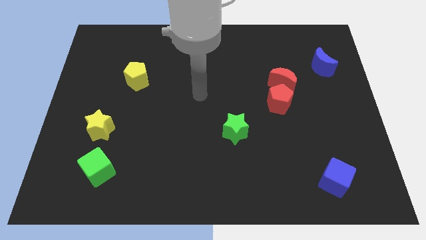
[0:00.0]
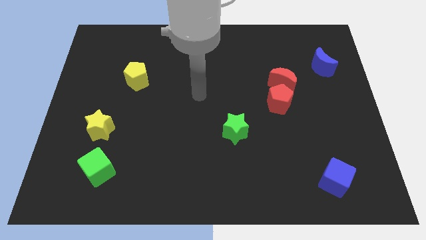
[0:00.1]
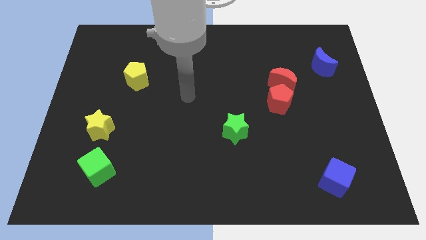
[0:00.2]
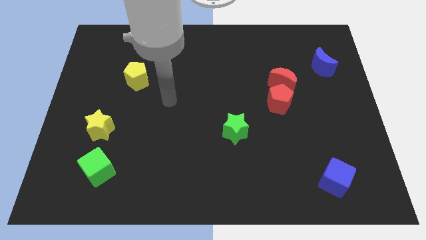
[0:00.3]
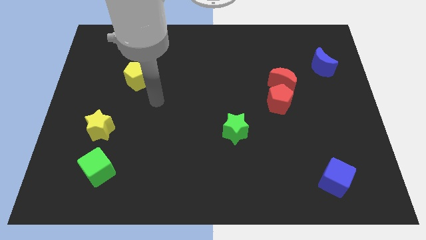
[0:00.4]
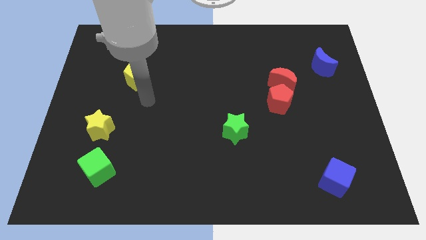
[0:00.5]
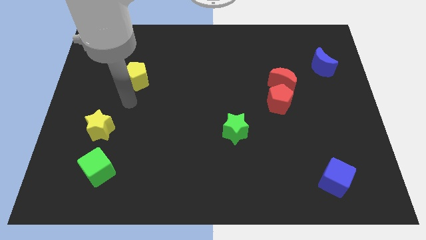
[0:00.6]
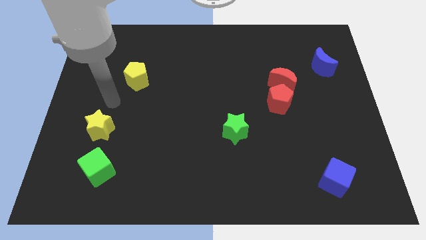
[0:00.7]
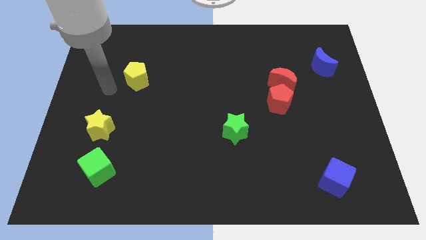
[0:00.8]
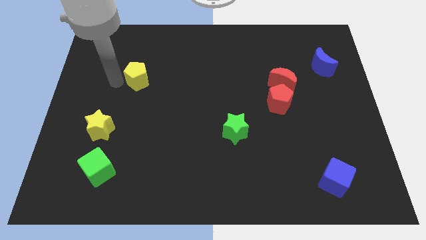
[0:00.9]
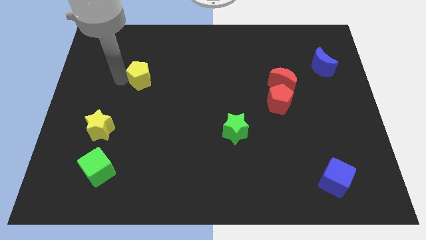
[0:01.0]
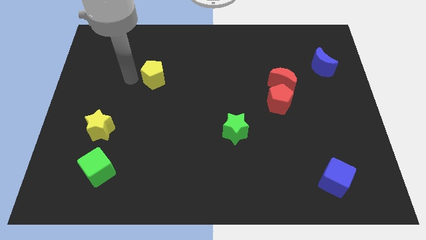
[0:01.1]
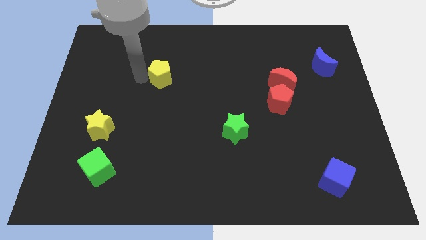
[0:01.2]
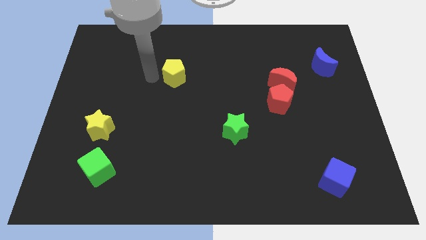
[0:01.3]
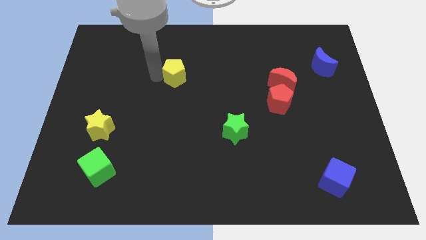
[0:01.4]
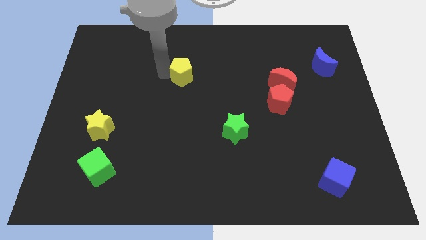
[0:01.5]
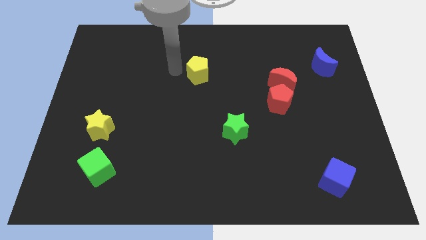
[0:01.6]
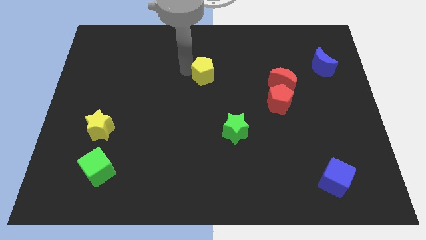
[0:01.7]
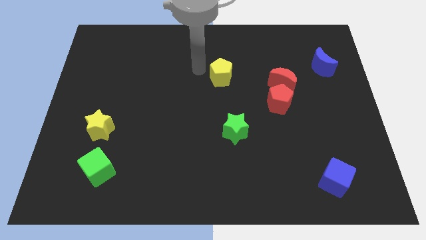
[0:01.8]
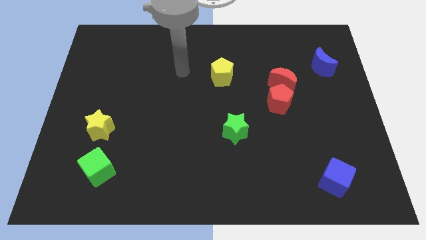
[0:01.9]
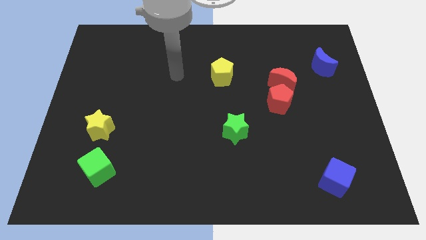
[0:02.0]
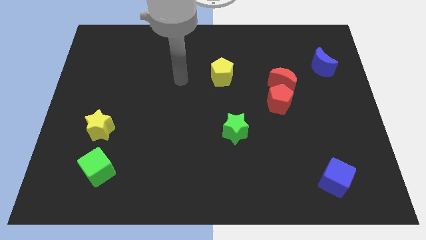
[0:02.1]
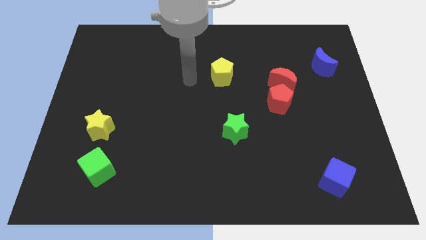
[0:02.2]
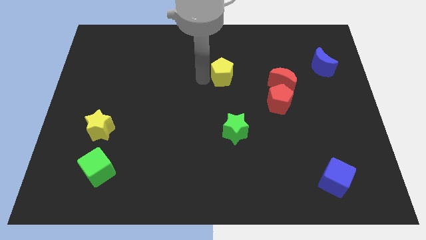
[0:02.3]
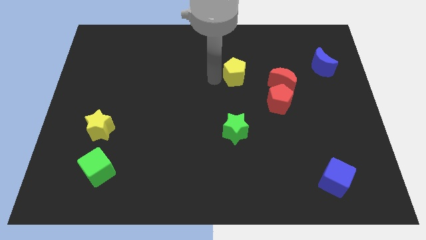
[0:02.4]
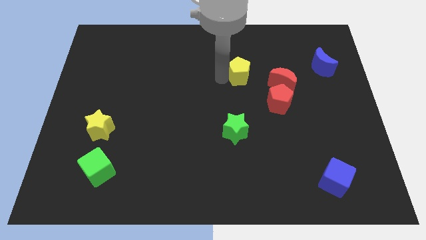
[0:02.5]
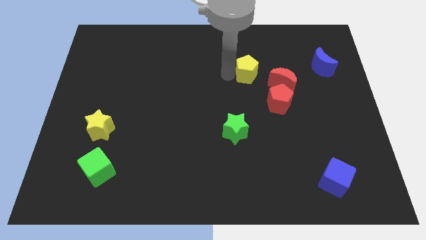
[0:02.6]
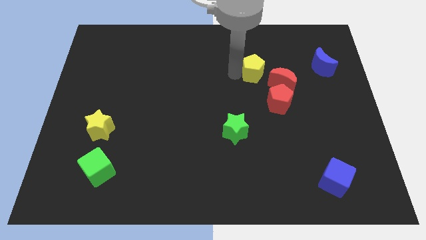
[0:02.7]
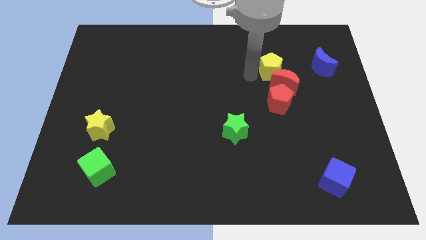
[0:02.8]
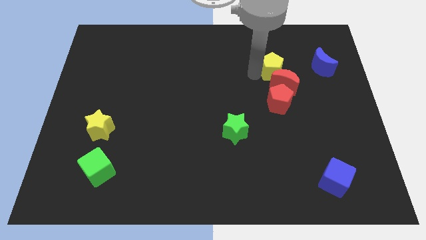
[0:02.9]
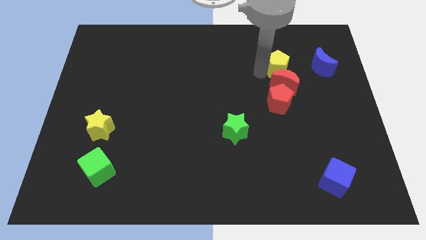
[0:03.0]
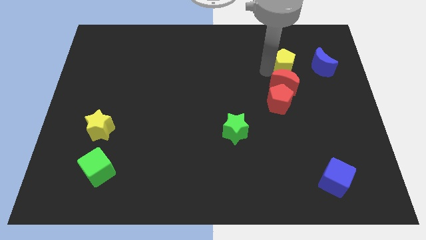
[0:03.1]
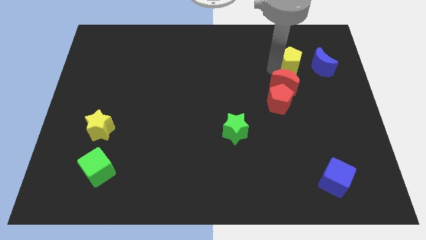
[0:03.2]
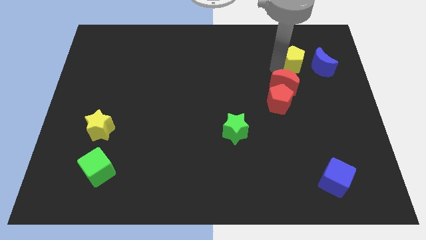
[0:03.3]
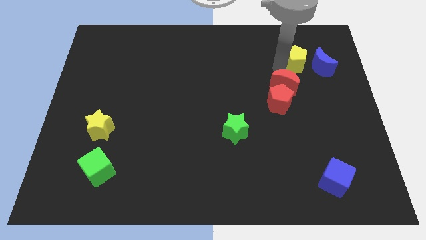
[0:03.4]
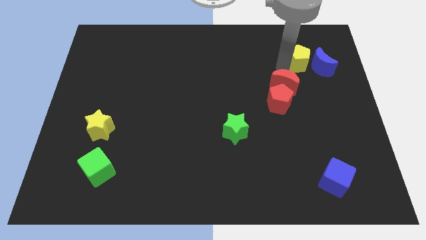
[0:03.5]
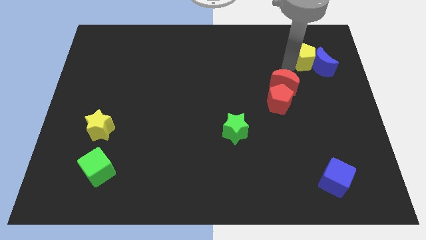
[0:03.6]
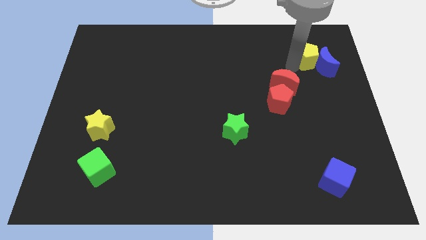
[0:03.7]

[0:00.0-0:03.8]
move the yellow pentagon next to the blue moon

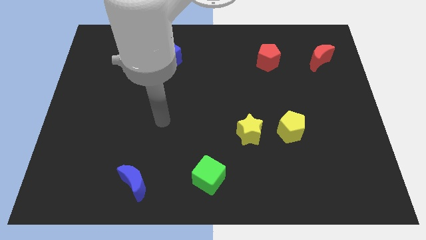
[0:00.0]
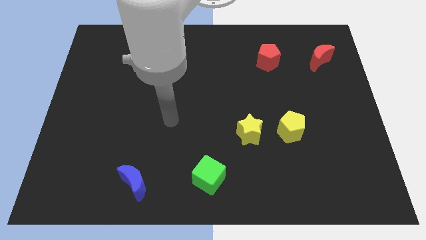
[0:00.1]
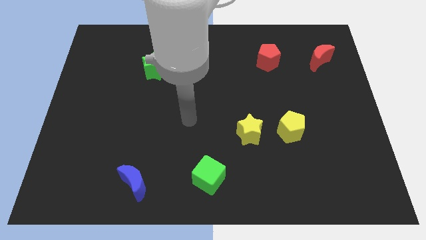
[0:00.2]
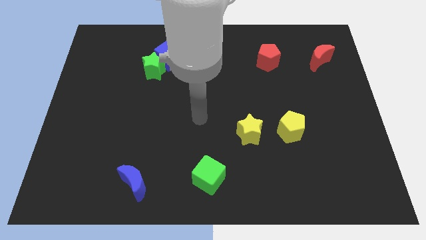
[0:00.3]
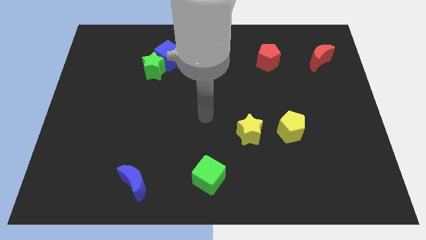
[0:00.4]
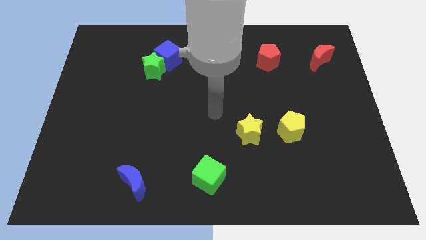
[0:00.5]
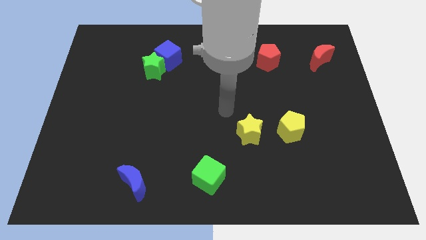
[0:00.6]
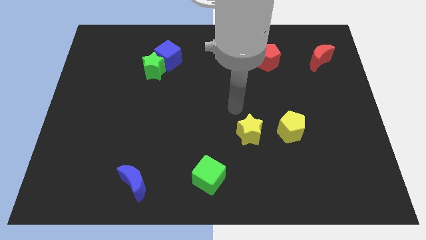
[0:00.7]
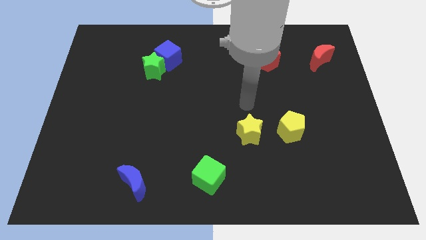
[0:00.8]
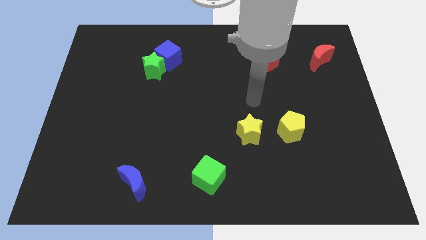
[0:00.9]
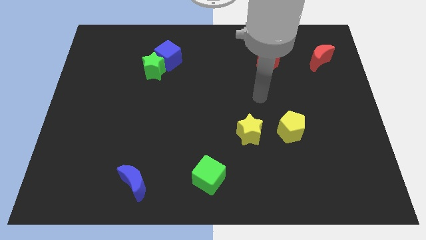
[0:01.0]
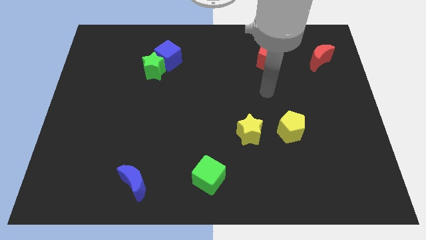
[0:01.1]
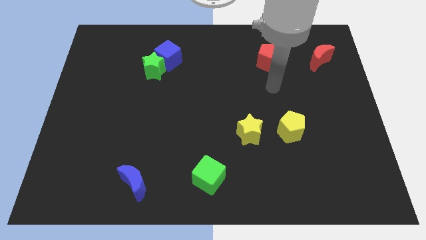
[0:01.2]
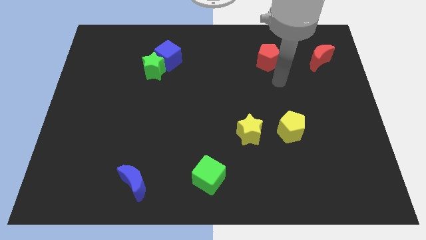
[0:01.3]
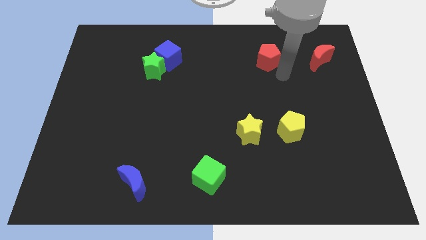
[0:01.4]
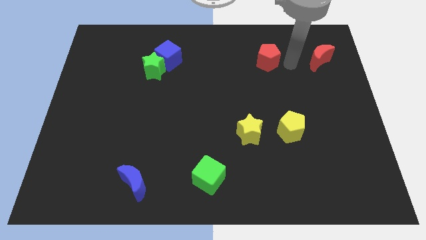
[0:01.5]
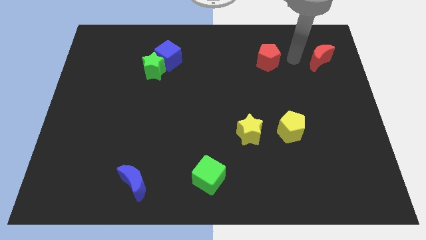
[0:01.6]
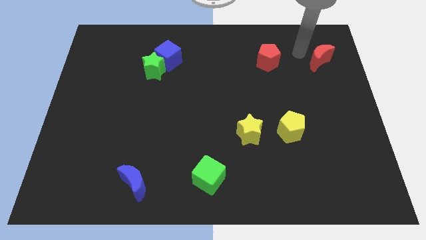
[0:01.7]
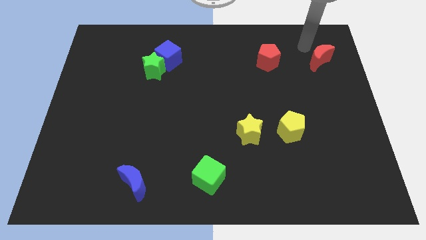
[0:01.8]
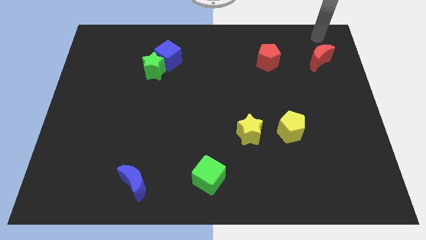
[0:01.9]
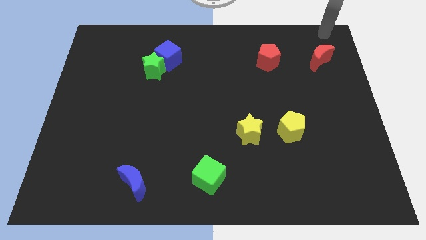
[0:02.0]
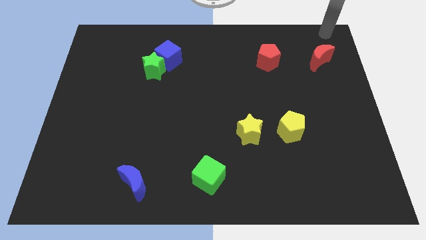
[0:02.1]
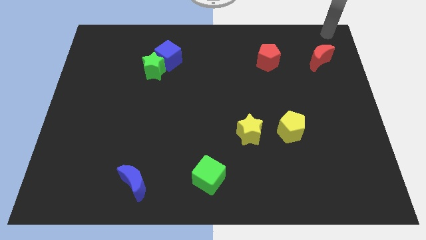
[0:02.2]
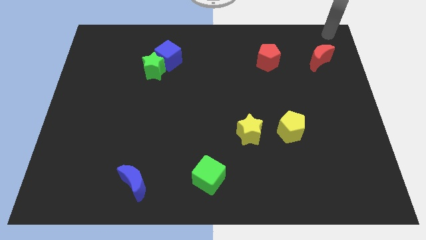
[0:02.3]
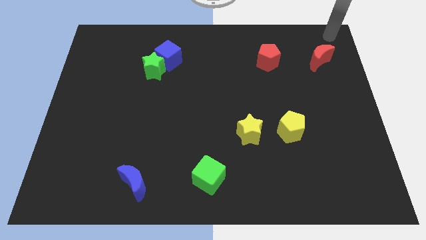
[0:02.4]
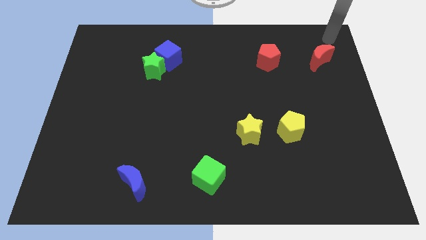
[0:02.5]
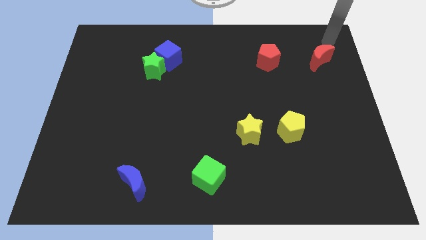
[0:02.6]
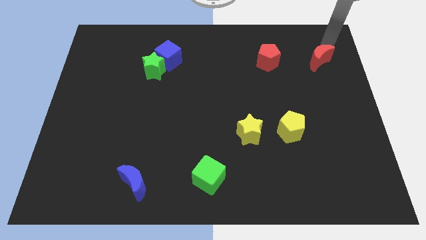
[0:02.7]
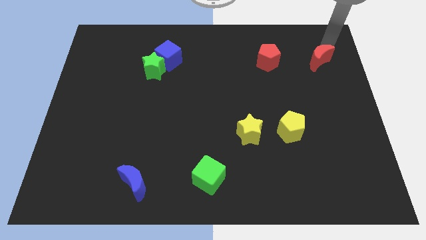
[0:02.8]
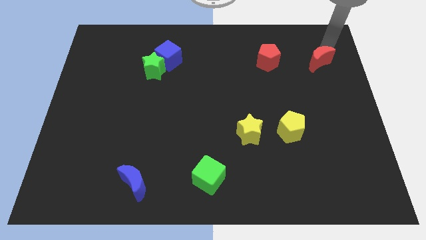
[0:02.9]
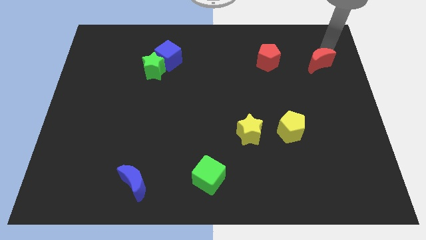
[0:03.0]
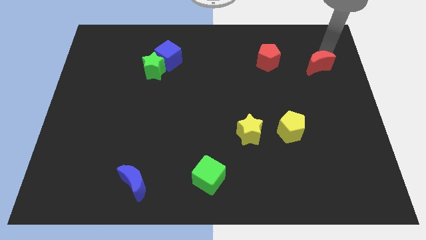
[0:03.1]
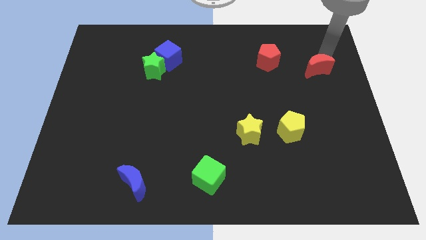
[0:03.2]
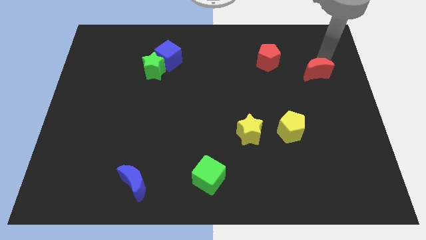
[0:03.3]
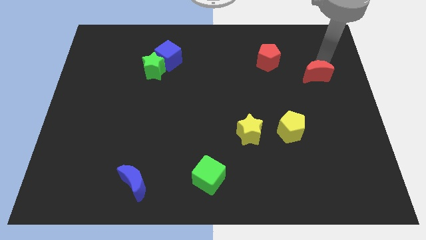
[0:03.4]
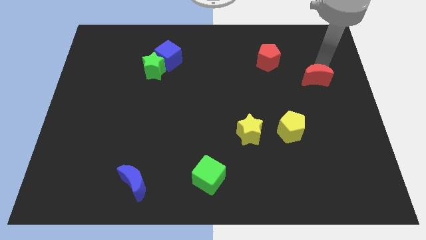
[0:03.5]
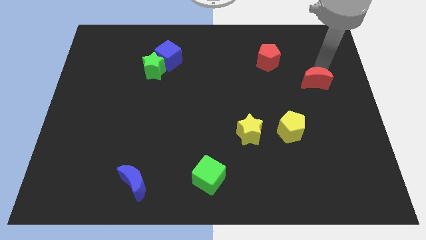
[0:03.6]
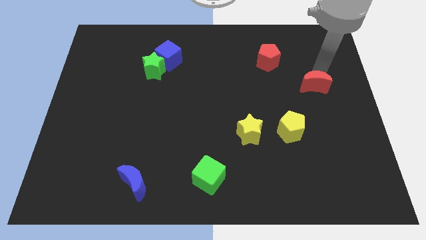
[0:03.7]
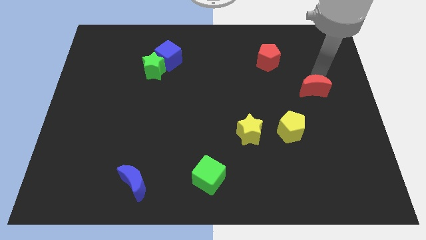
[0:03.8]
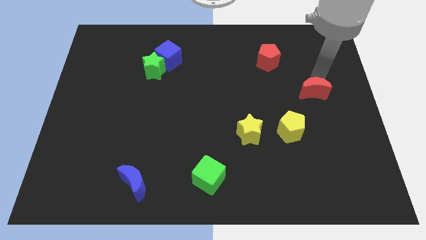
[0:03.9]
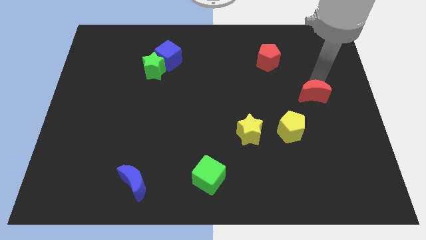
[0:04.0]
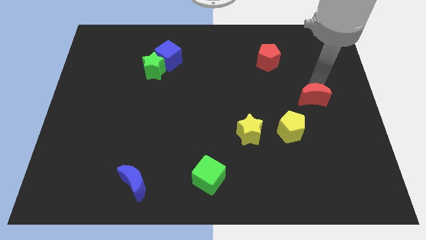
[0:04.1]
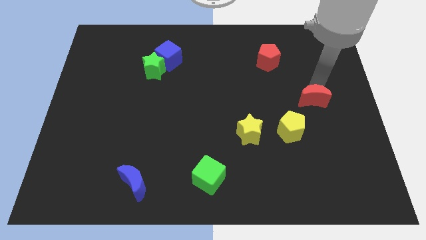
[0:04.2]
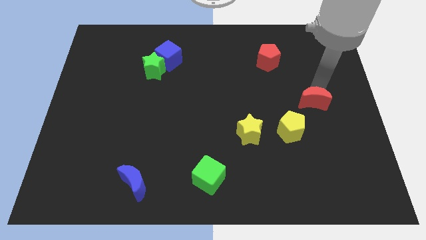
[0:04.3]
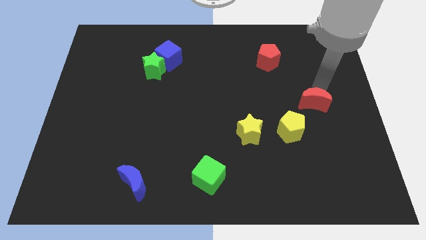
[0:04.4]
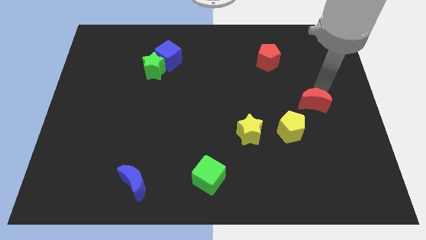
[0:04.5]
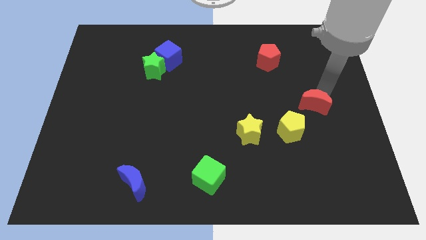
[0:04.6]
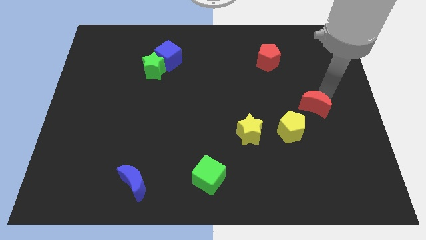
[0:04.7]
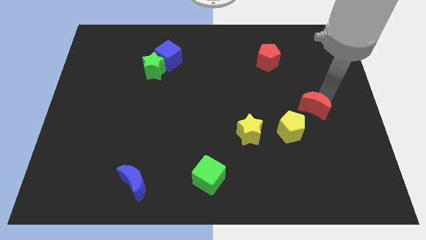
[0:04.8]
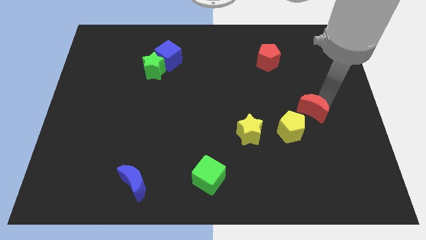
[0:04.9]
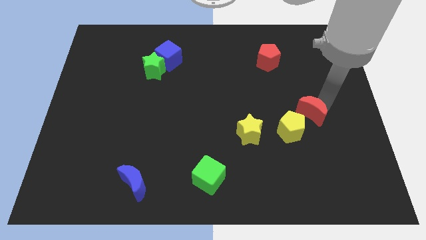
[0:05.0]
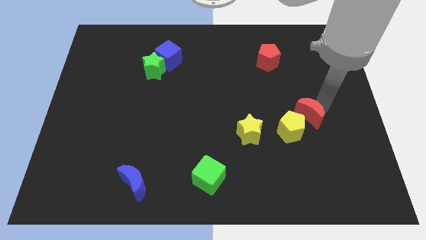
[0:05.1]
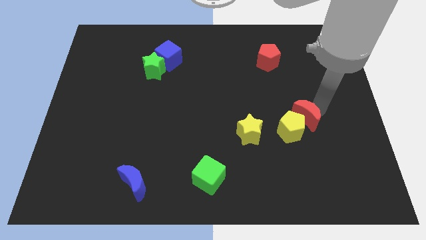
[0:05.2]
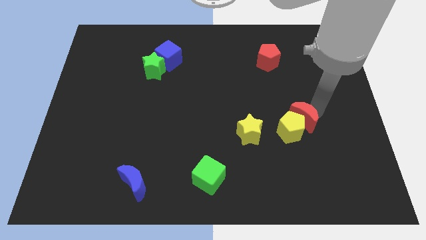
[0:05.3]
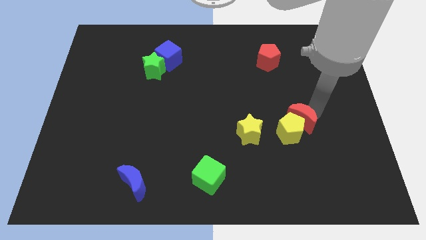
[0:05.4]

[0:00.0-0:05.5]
push the red moon to the yellow pentagon
